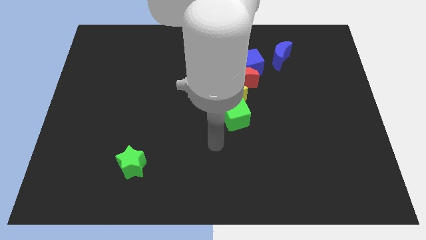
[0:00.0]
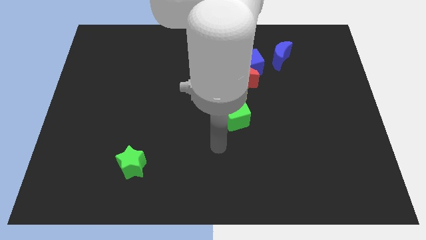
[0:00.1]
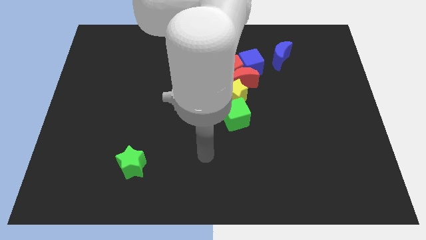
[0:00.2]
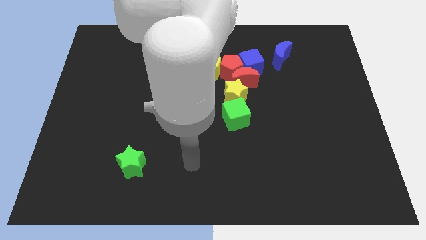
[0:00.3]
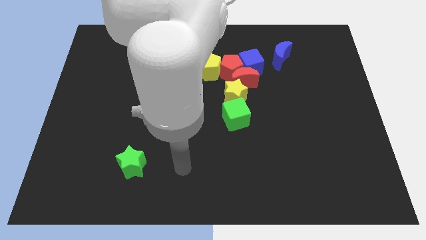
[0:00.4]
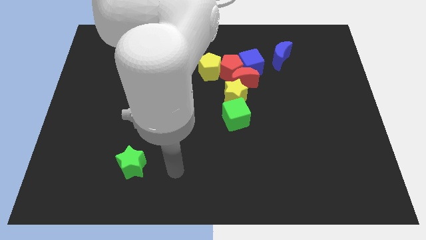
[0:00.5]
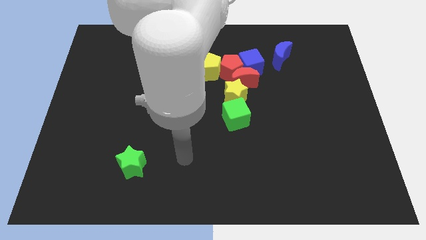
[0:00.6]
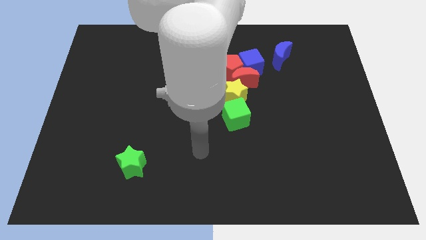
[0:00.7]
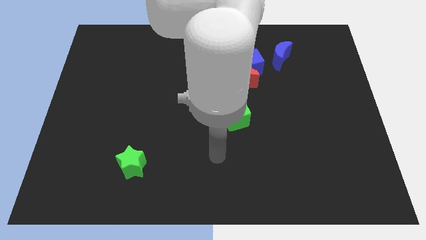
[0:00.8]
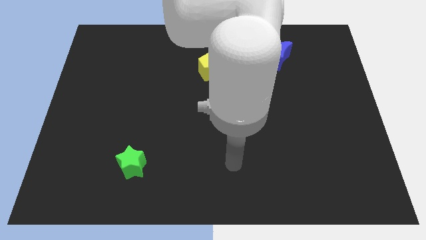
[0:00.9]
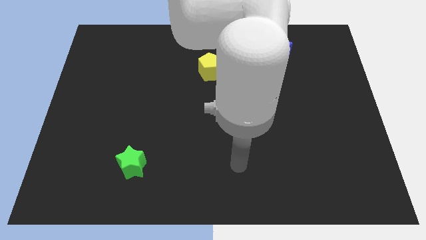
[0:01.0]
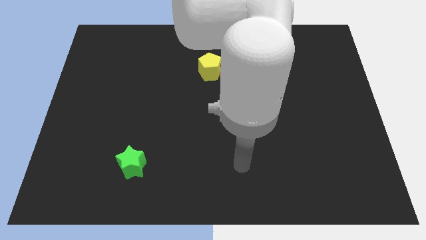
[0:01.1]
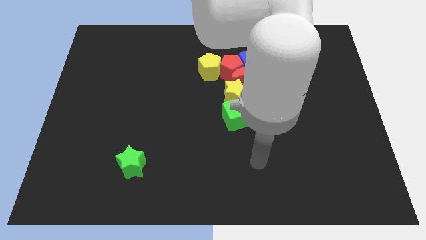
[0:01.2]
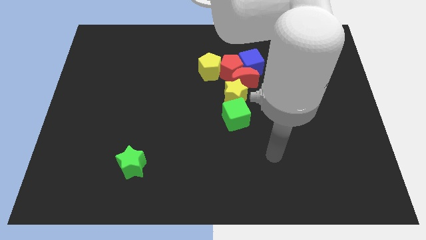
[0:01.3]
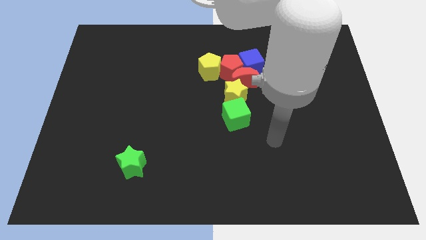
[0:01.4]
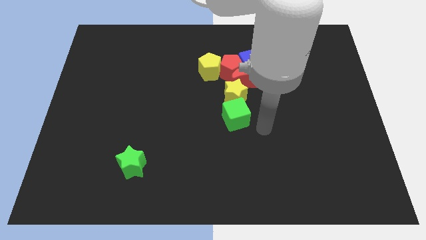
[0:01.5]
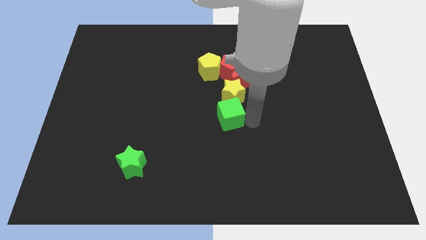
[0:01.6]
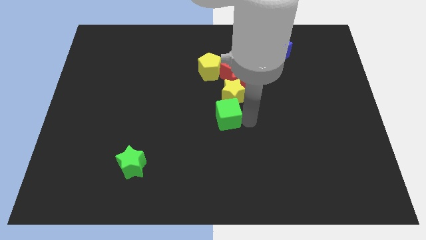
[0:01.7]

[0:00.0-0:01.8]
touch the right side of the green cube

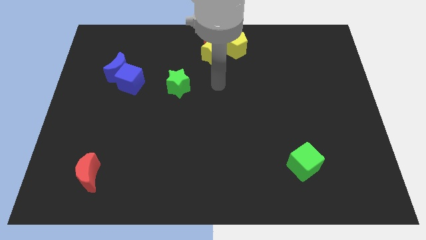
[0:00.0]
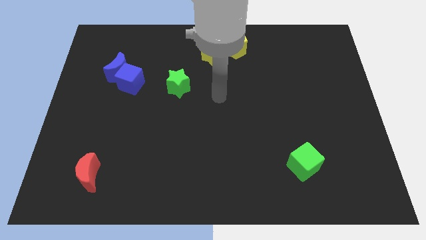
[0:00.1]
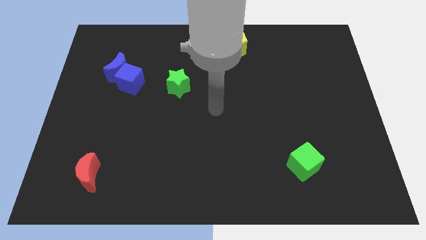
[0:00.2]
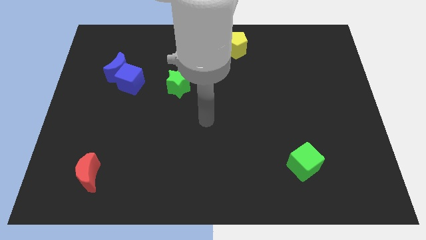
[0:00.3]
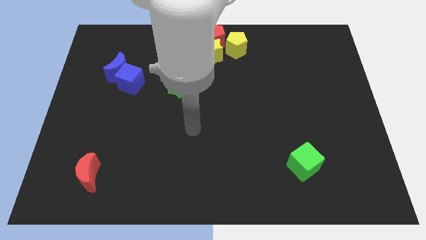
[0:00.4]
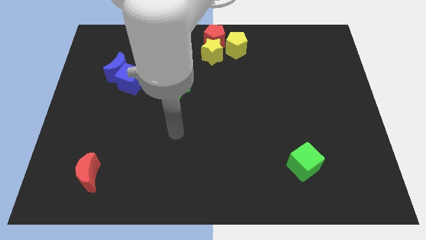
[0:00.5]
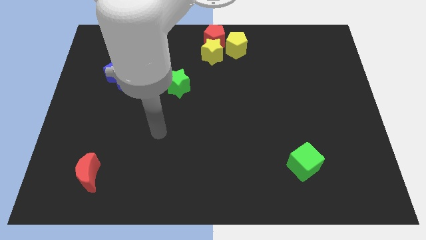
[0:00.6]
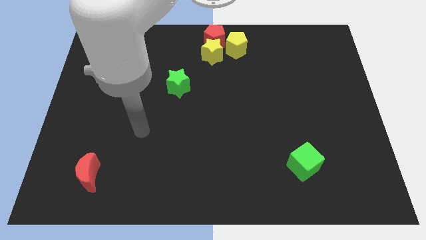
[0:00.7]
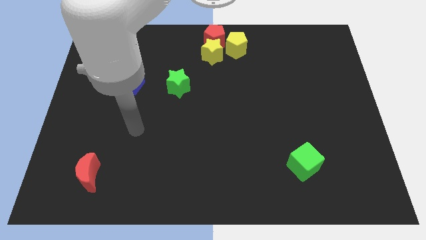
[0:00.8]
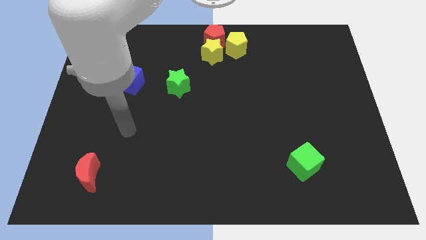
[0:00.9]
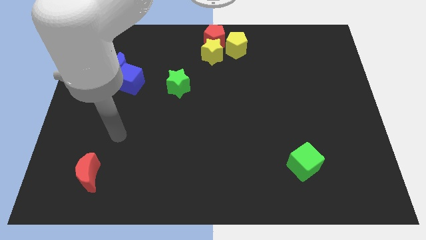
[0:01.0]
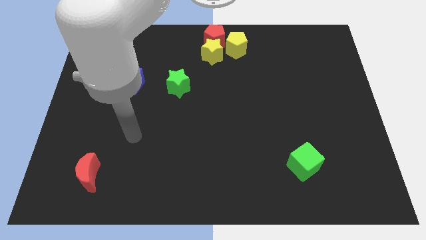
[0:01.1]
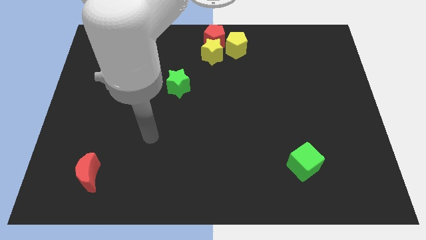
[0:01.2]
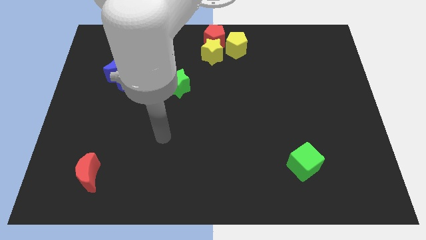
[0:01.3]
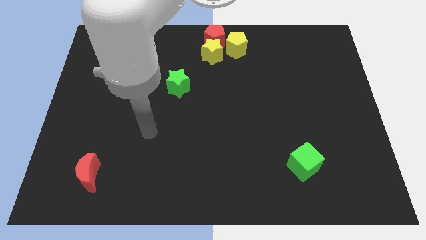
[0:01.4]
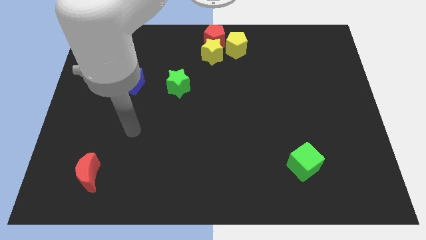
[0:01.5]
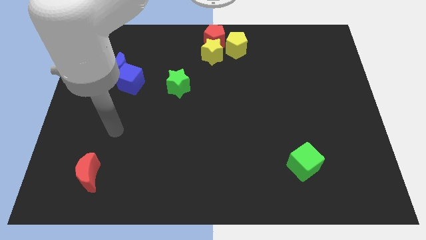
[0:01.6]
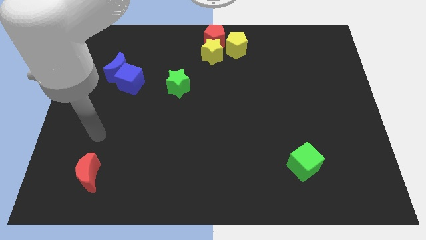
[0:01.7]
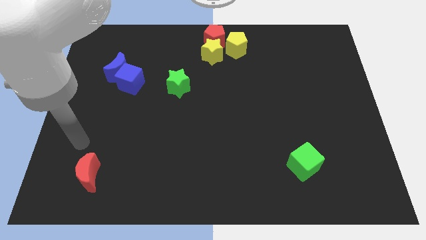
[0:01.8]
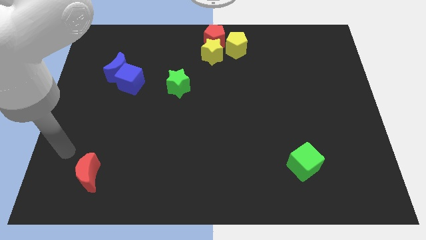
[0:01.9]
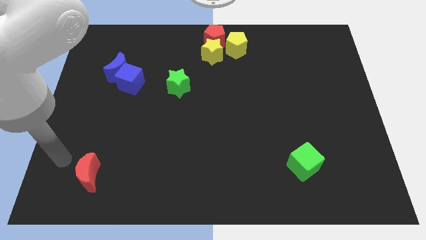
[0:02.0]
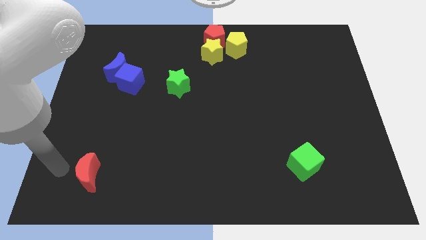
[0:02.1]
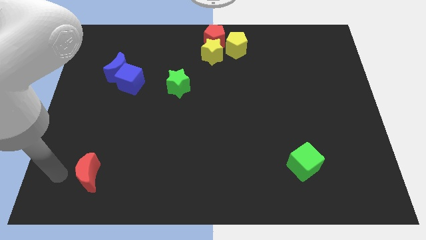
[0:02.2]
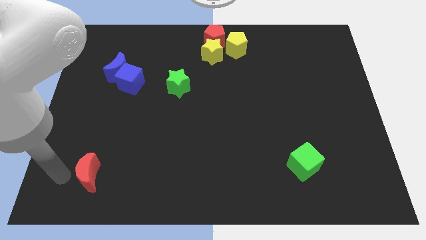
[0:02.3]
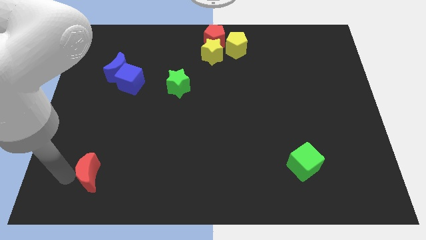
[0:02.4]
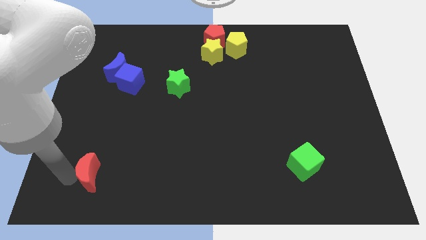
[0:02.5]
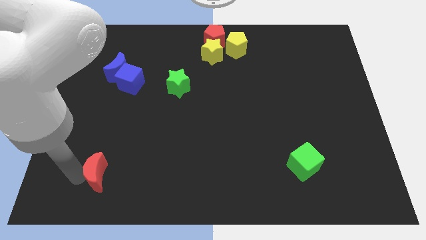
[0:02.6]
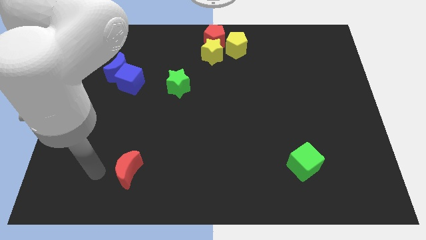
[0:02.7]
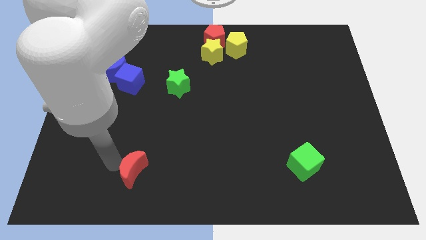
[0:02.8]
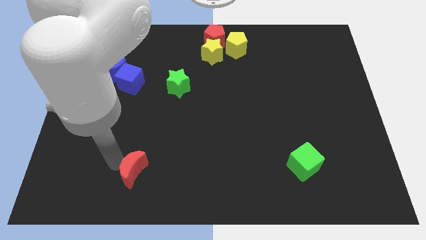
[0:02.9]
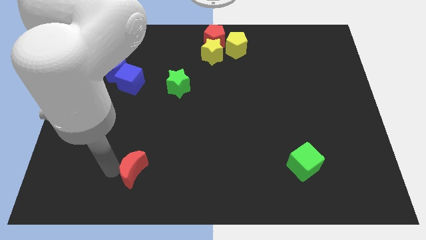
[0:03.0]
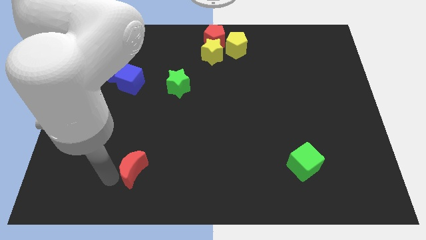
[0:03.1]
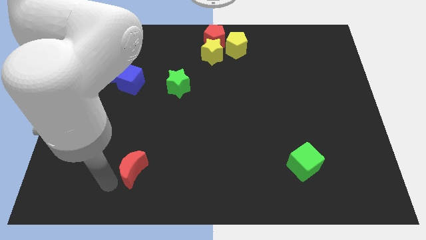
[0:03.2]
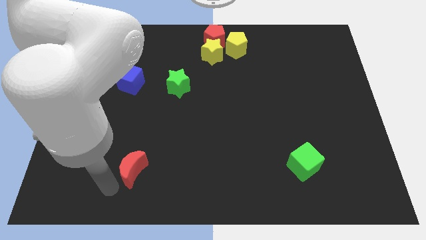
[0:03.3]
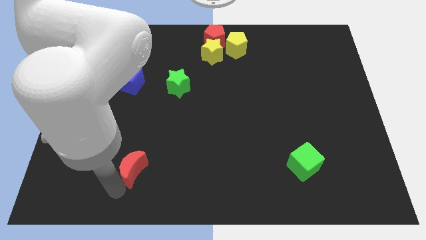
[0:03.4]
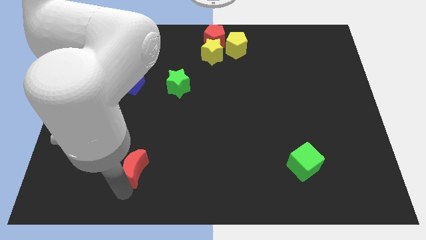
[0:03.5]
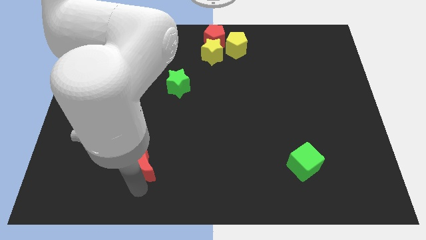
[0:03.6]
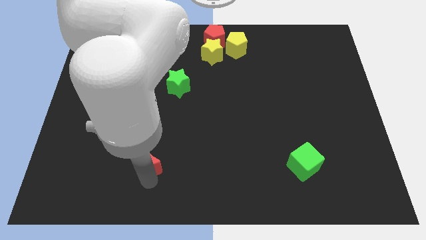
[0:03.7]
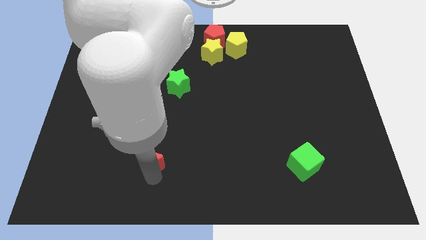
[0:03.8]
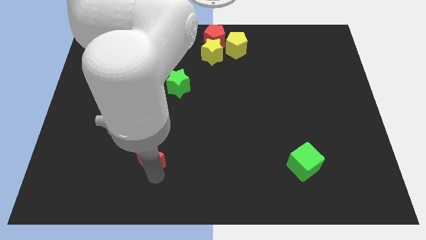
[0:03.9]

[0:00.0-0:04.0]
move the red crescent diagonal to the left of the green cube

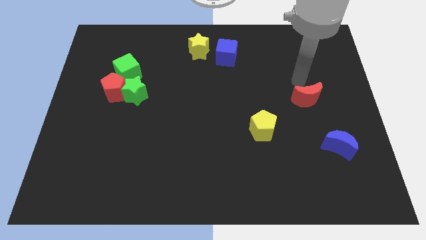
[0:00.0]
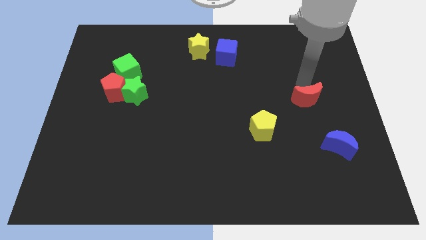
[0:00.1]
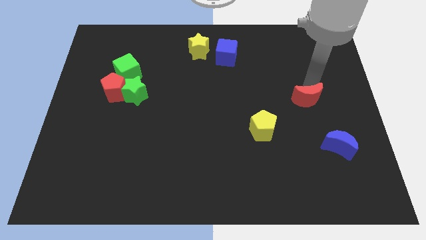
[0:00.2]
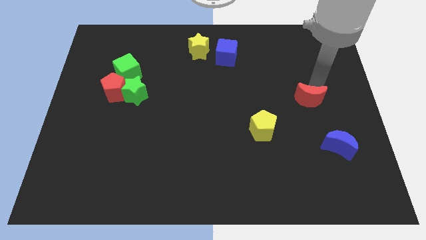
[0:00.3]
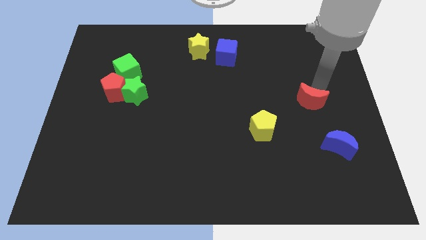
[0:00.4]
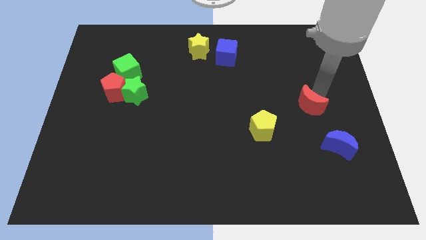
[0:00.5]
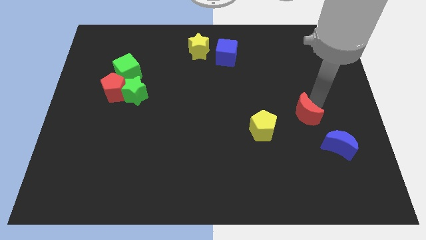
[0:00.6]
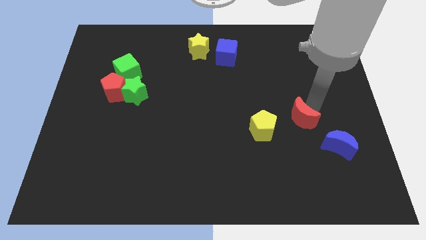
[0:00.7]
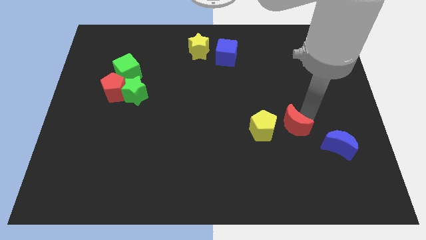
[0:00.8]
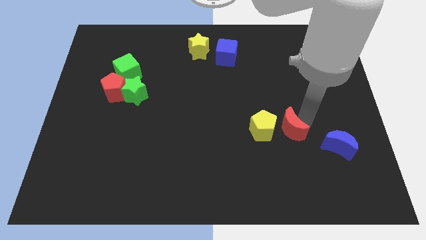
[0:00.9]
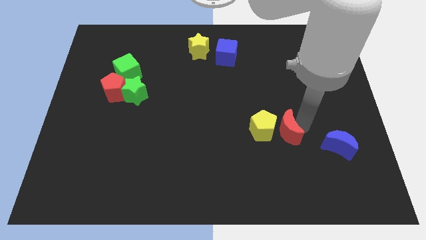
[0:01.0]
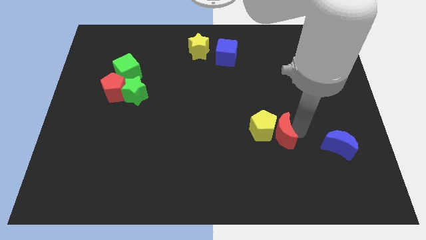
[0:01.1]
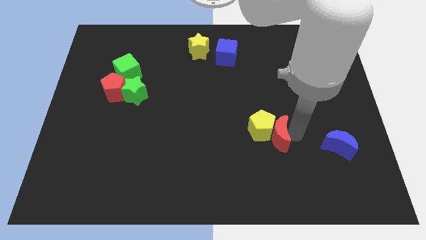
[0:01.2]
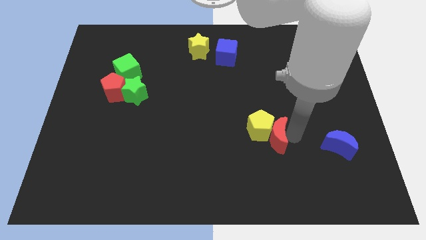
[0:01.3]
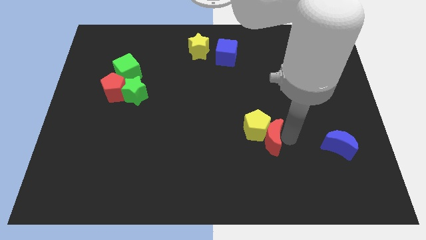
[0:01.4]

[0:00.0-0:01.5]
push the red moon into the yellow pentagon

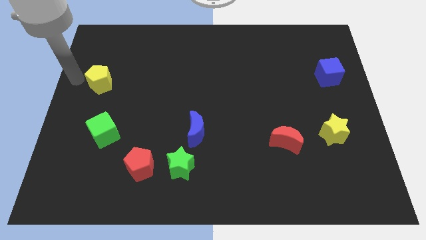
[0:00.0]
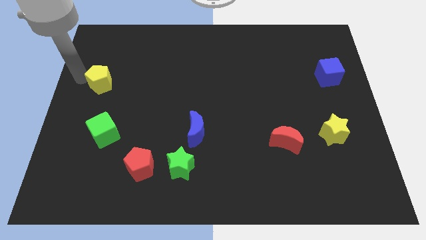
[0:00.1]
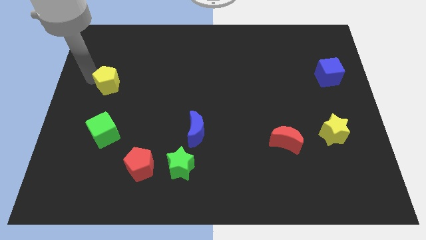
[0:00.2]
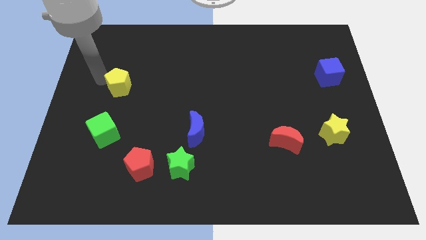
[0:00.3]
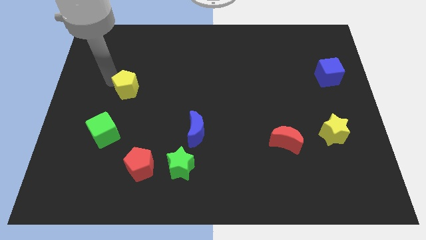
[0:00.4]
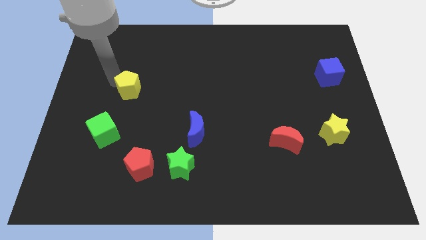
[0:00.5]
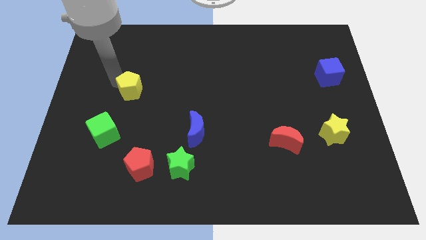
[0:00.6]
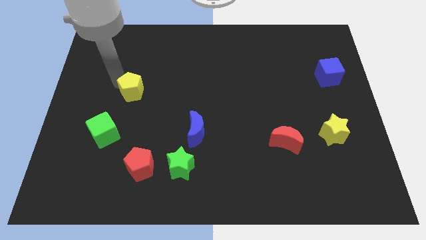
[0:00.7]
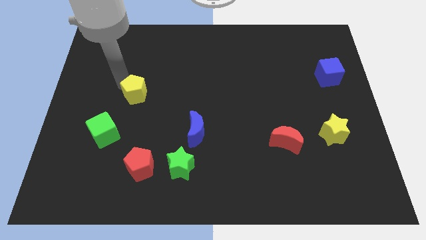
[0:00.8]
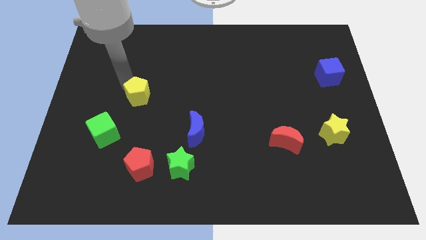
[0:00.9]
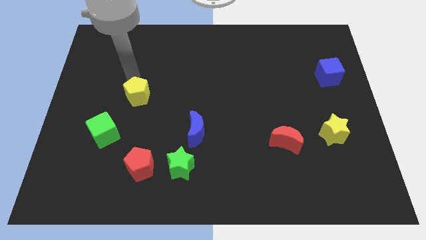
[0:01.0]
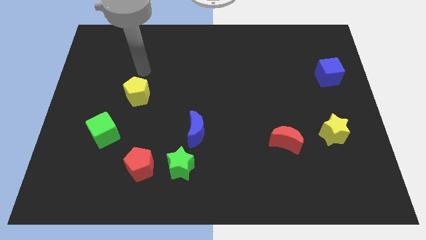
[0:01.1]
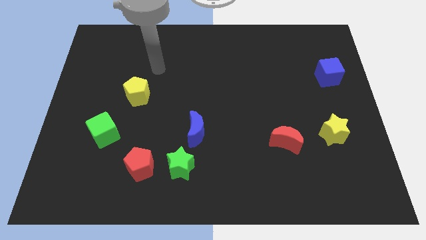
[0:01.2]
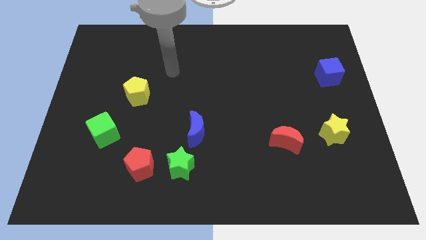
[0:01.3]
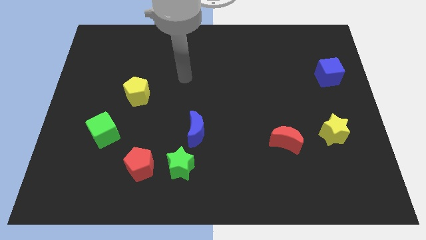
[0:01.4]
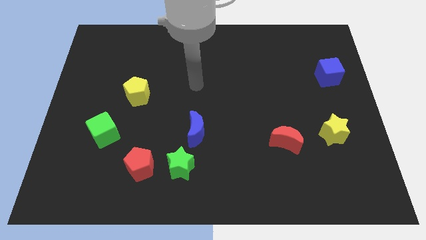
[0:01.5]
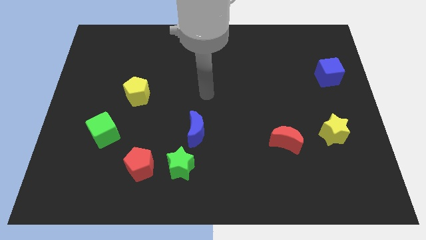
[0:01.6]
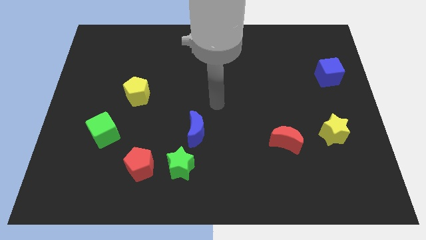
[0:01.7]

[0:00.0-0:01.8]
push the yellow pentagon to the bottom of the board
